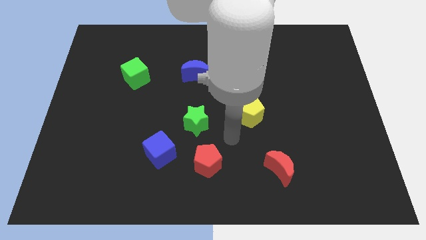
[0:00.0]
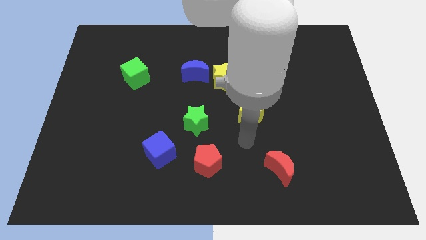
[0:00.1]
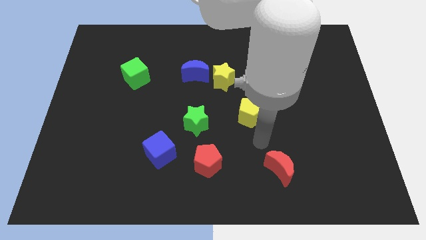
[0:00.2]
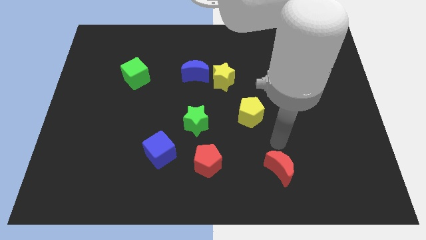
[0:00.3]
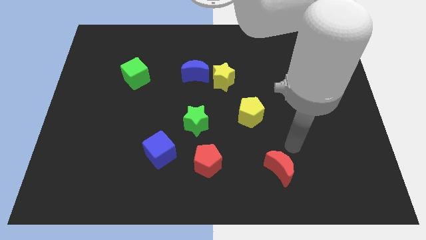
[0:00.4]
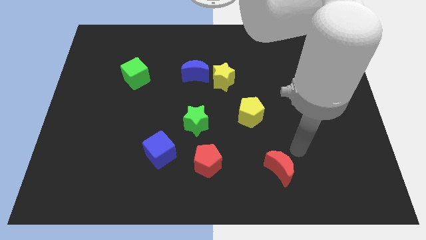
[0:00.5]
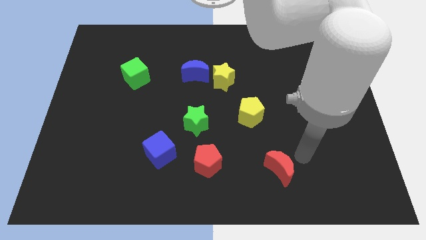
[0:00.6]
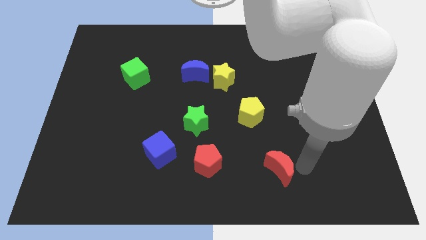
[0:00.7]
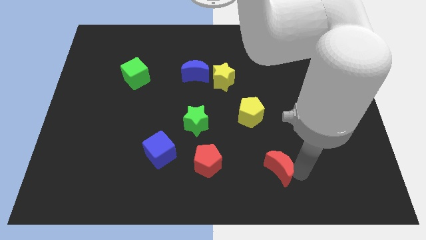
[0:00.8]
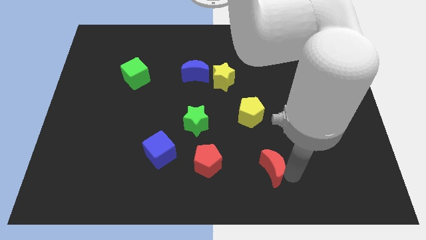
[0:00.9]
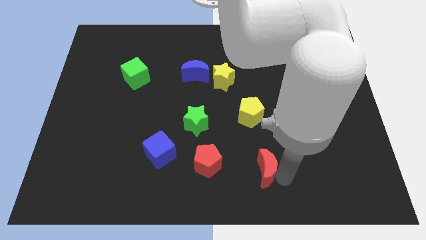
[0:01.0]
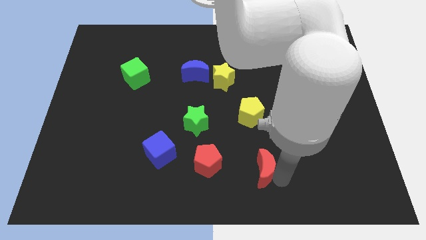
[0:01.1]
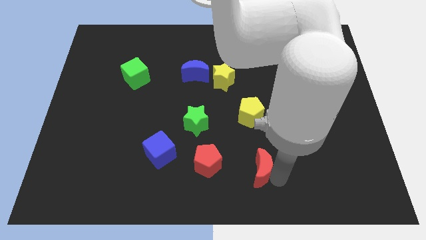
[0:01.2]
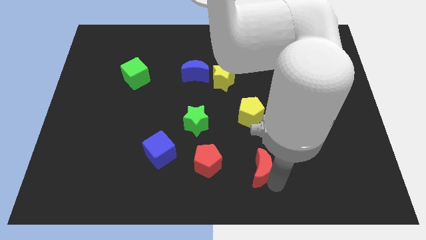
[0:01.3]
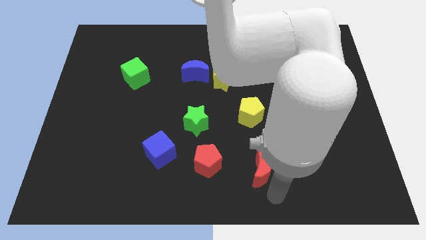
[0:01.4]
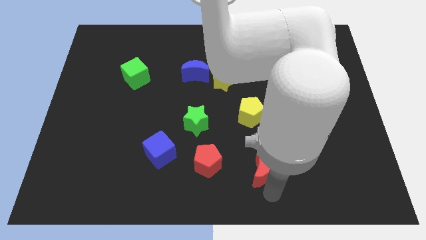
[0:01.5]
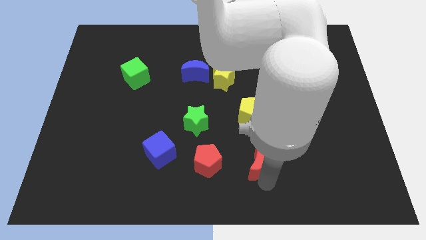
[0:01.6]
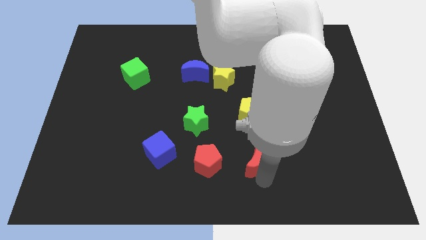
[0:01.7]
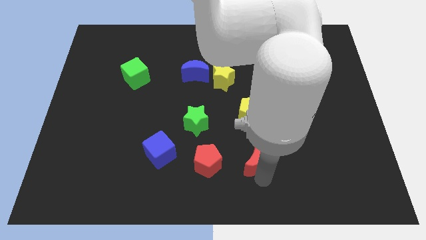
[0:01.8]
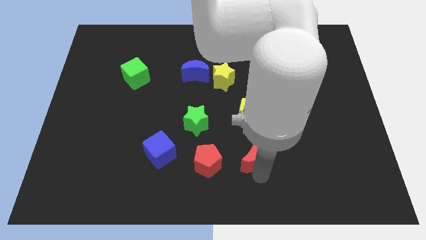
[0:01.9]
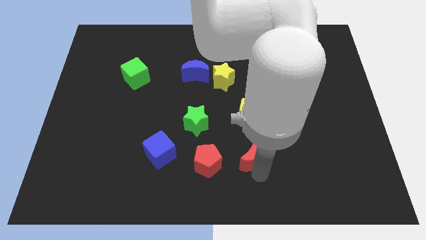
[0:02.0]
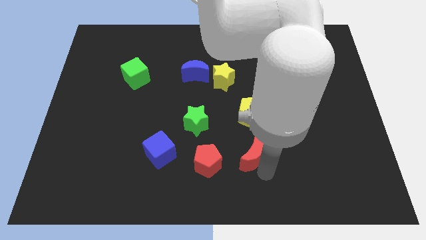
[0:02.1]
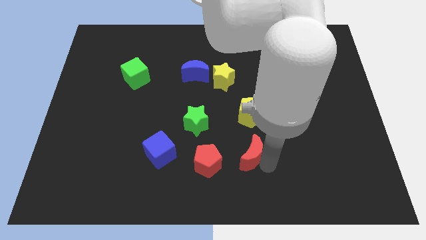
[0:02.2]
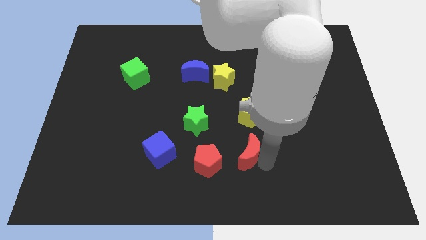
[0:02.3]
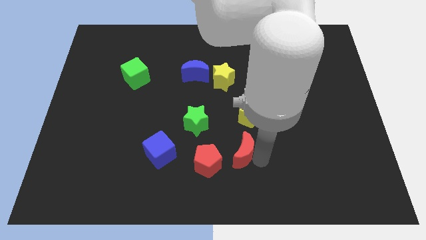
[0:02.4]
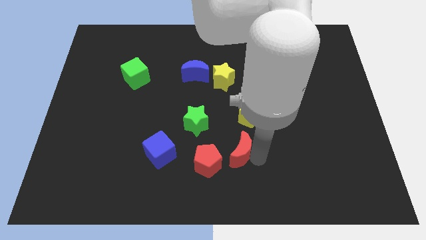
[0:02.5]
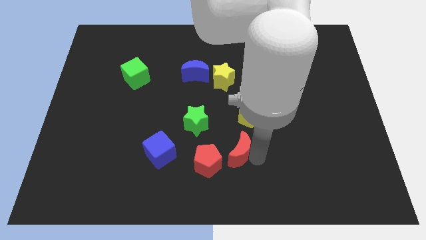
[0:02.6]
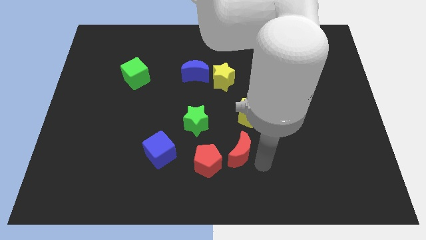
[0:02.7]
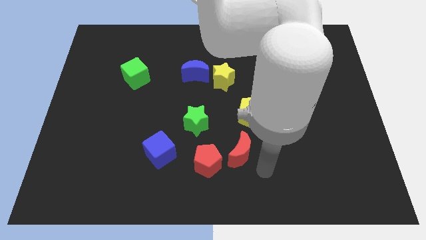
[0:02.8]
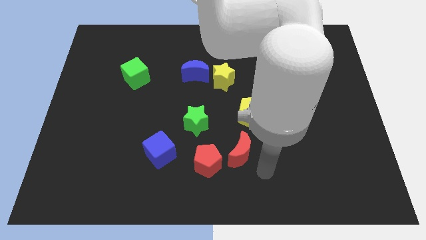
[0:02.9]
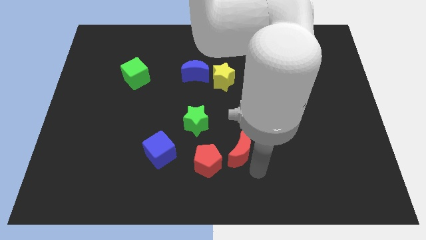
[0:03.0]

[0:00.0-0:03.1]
push the red moon to the top right side of the red pentagon

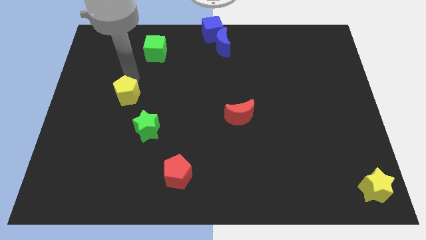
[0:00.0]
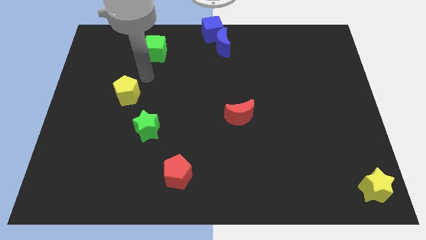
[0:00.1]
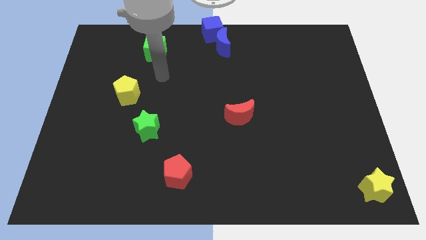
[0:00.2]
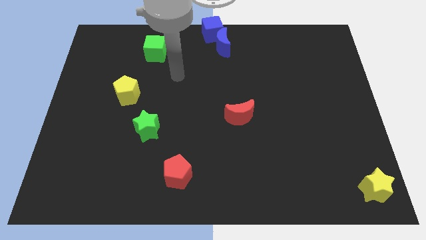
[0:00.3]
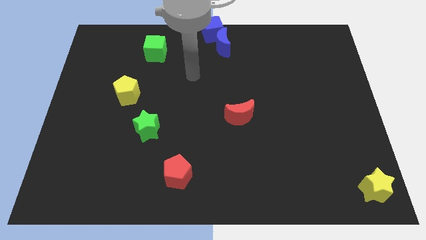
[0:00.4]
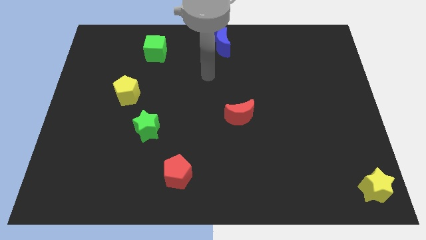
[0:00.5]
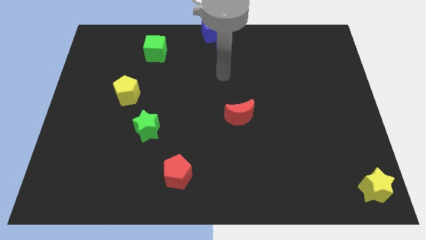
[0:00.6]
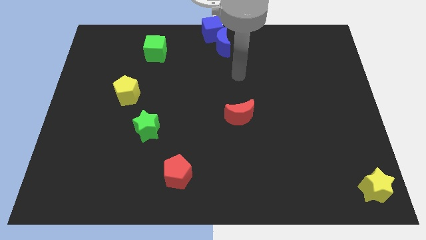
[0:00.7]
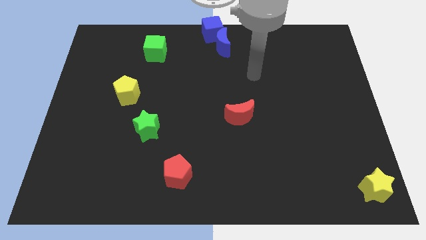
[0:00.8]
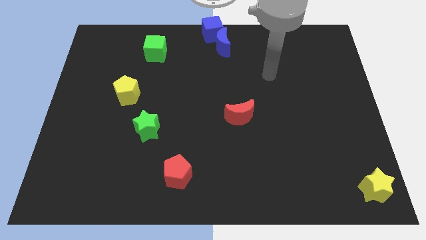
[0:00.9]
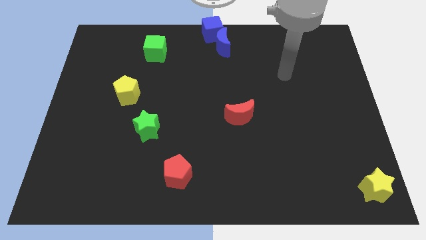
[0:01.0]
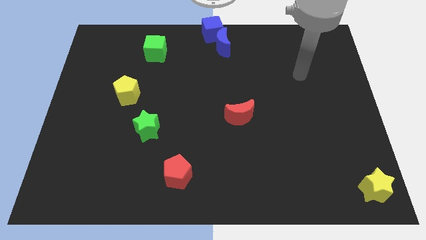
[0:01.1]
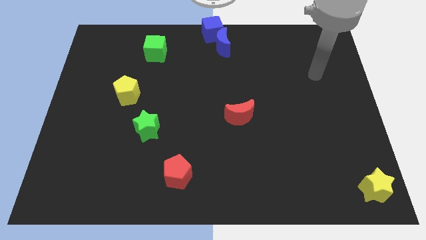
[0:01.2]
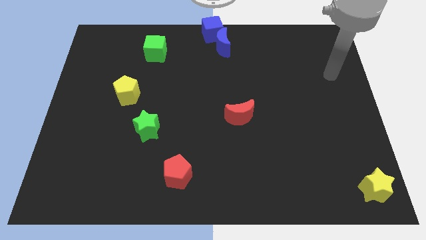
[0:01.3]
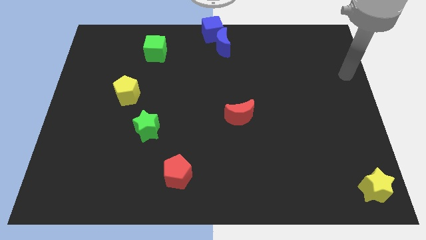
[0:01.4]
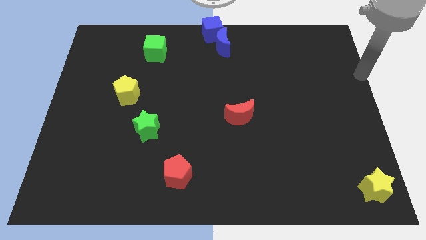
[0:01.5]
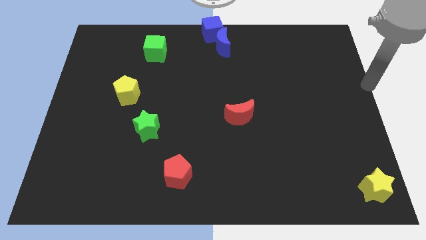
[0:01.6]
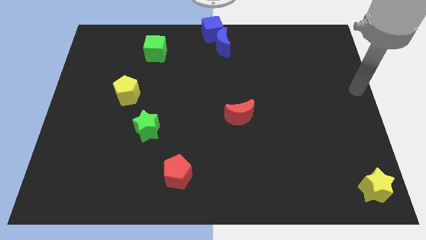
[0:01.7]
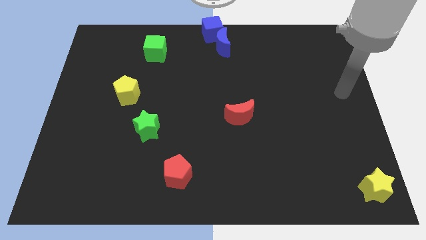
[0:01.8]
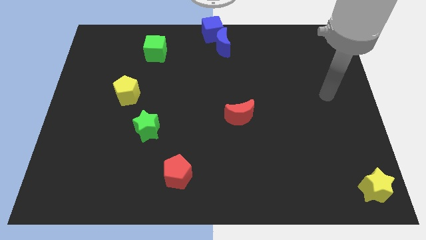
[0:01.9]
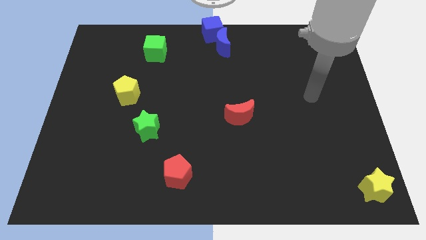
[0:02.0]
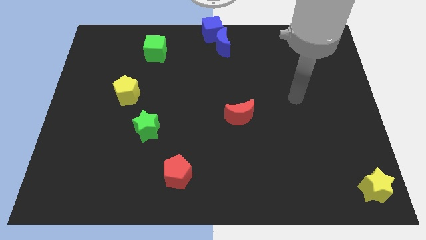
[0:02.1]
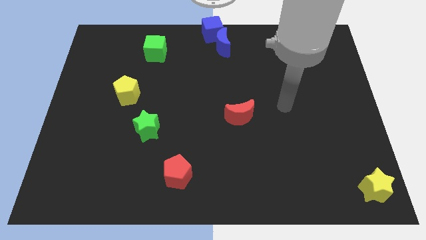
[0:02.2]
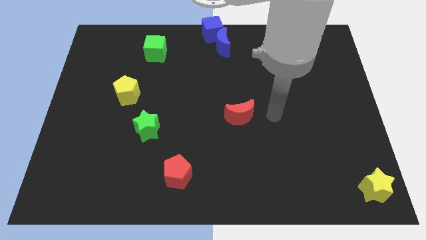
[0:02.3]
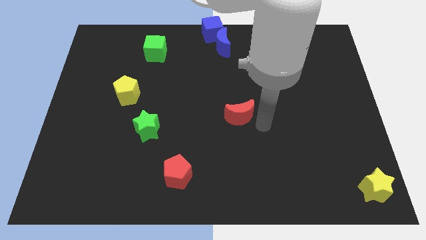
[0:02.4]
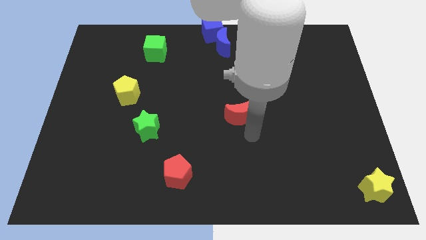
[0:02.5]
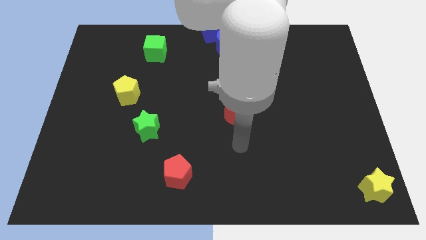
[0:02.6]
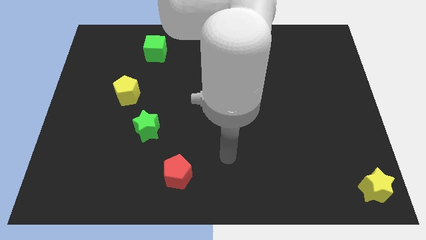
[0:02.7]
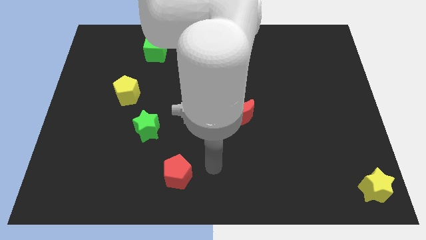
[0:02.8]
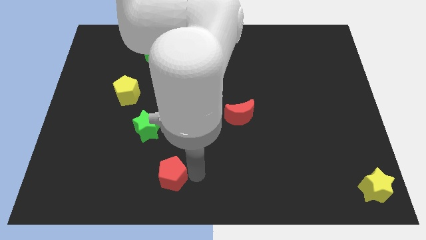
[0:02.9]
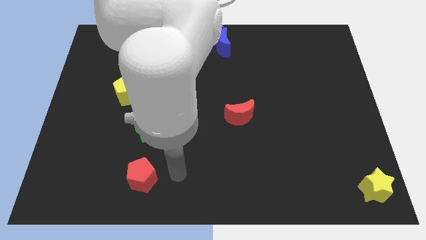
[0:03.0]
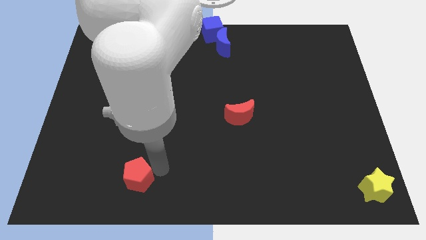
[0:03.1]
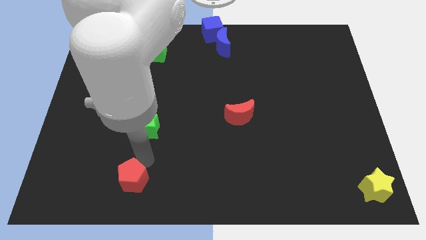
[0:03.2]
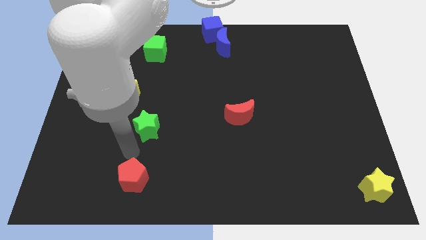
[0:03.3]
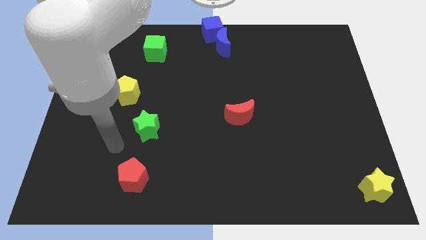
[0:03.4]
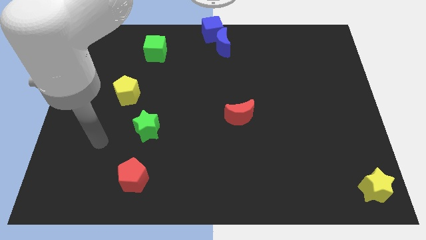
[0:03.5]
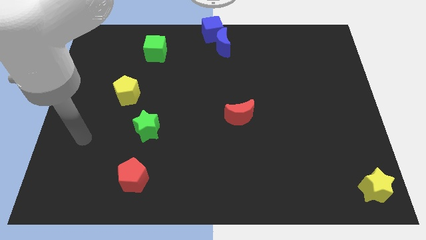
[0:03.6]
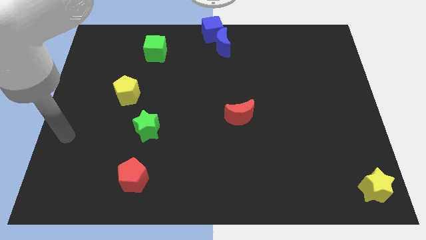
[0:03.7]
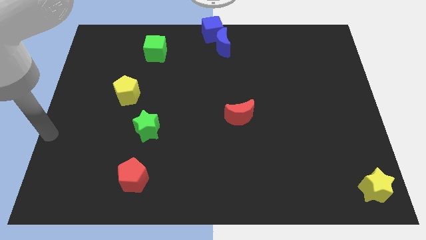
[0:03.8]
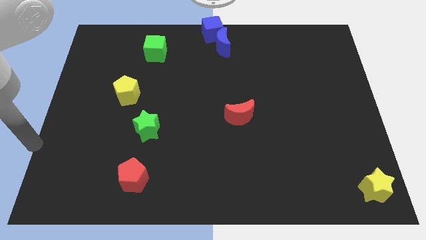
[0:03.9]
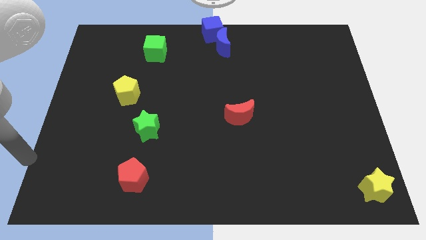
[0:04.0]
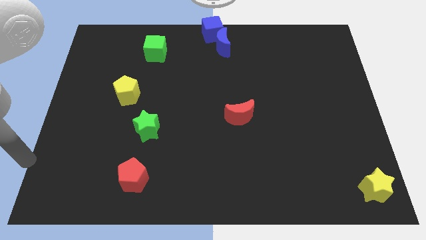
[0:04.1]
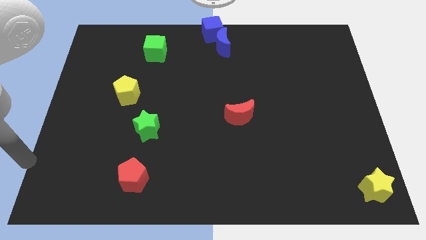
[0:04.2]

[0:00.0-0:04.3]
hit the red pentagon with the arm

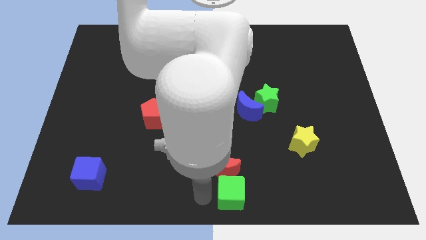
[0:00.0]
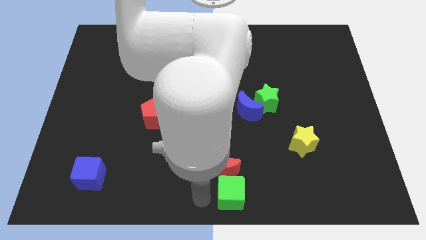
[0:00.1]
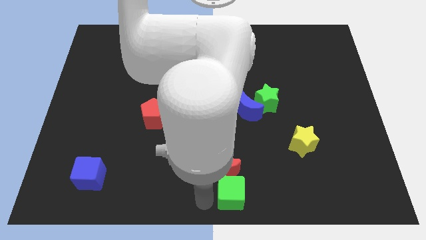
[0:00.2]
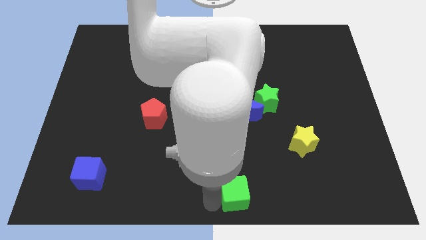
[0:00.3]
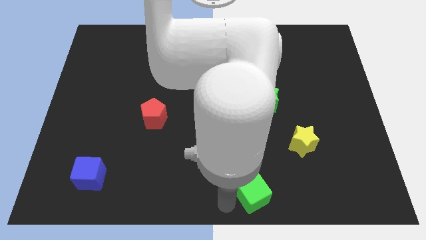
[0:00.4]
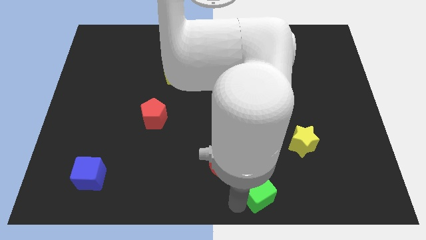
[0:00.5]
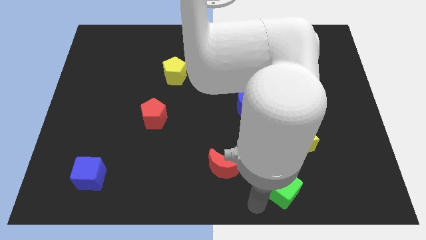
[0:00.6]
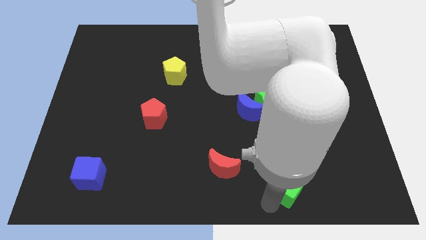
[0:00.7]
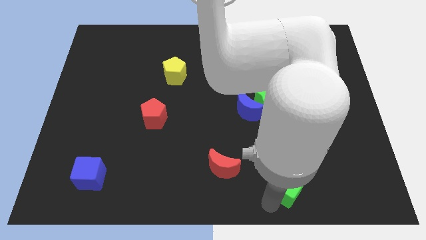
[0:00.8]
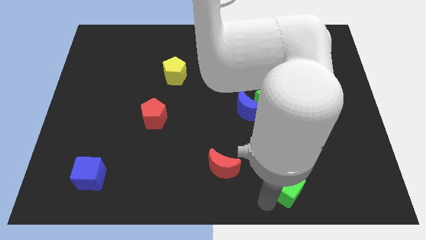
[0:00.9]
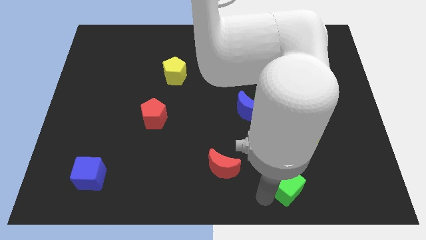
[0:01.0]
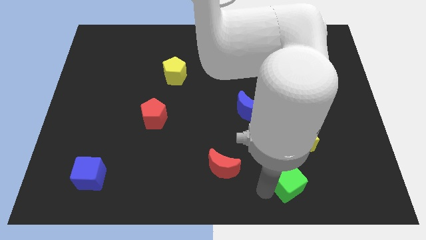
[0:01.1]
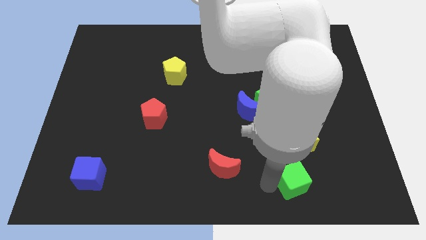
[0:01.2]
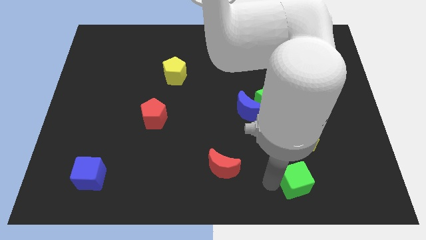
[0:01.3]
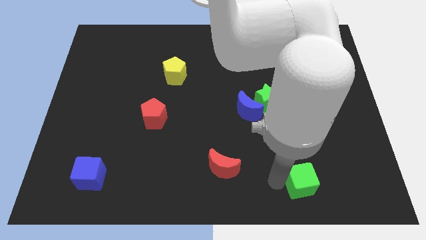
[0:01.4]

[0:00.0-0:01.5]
move the green cube slightly towards right
